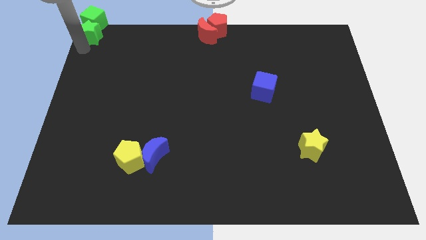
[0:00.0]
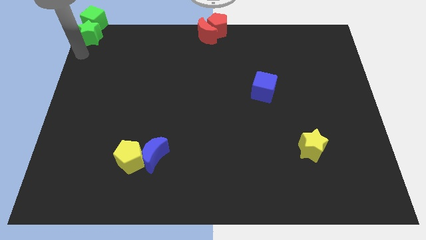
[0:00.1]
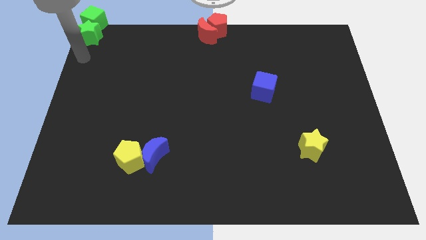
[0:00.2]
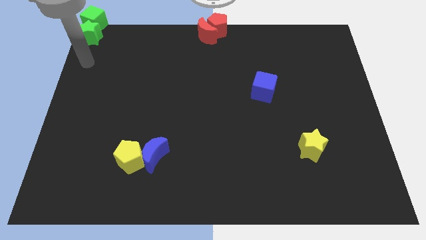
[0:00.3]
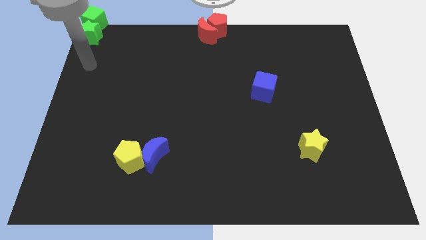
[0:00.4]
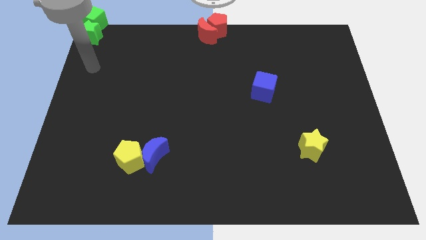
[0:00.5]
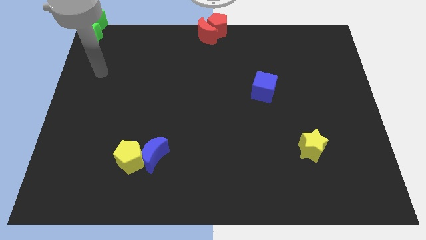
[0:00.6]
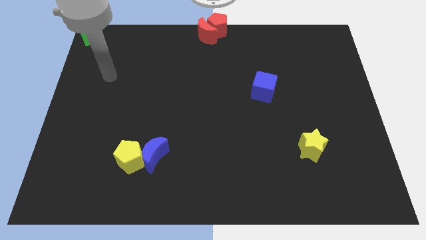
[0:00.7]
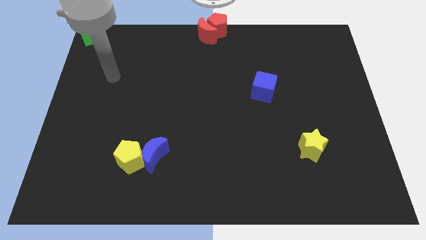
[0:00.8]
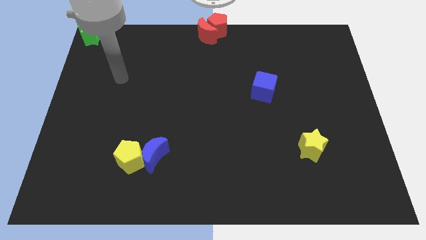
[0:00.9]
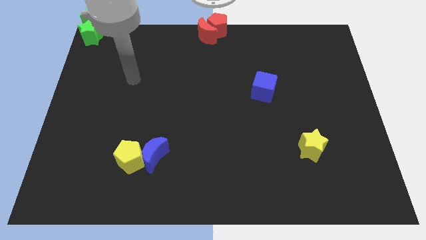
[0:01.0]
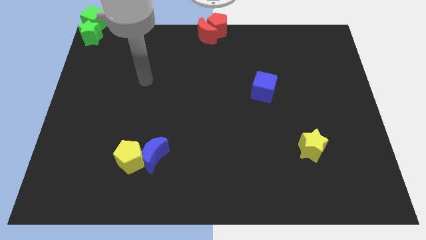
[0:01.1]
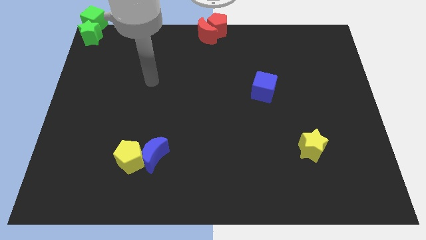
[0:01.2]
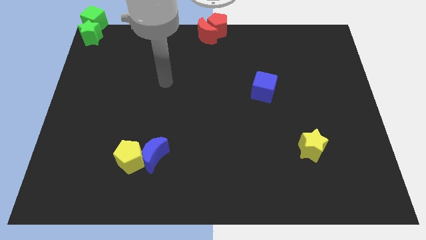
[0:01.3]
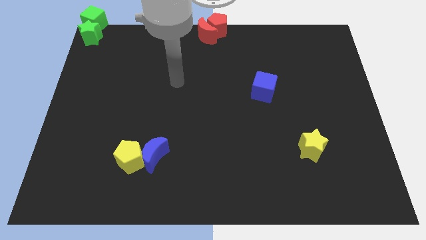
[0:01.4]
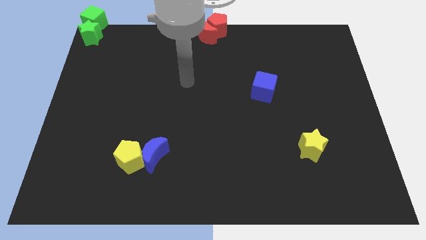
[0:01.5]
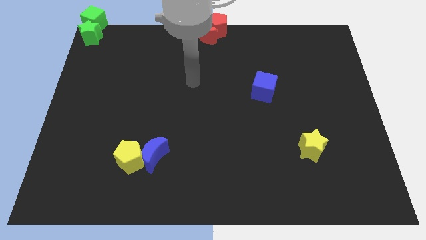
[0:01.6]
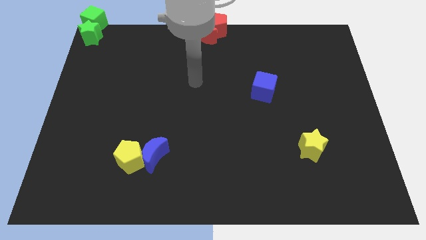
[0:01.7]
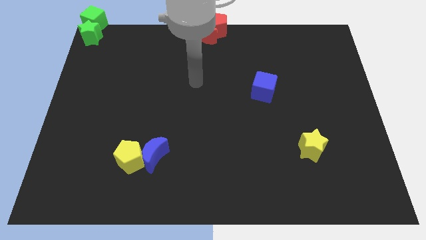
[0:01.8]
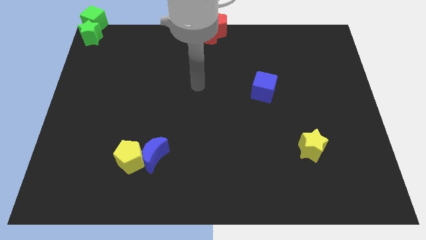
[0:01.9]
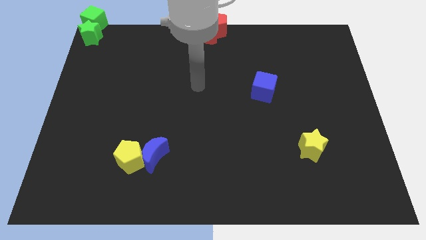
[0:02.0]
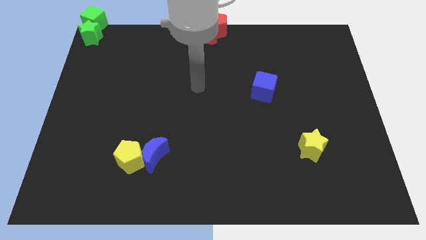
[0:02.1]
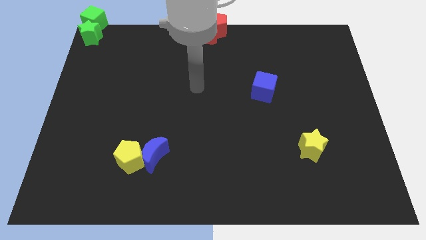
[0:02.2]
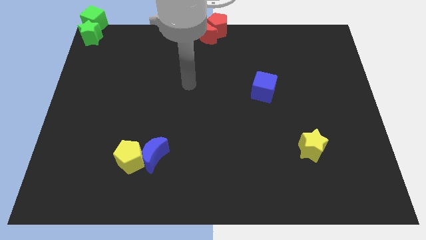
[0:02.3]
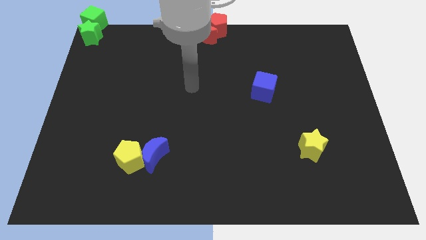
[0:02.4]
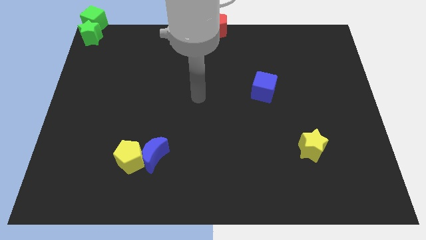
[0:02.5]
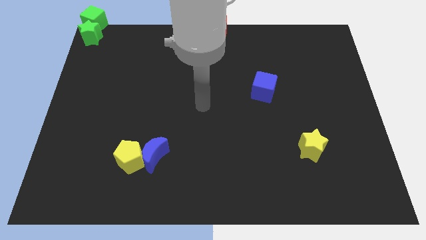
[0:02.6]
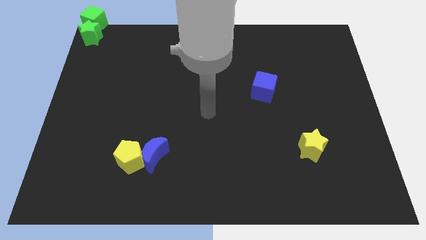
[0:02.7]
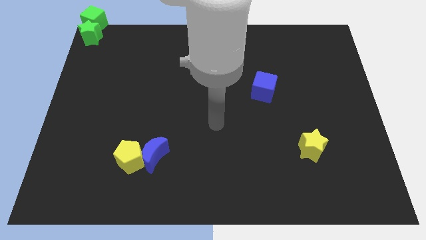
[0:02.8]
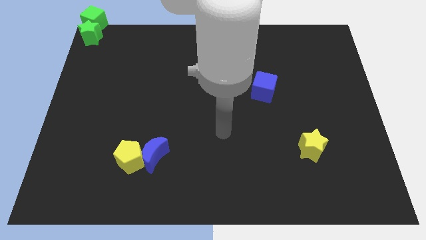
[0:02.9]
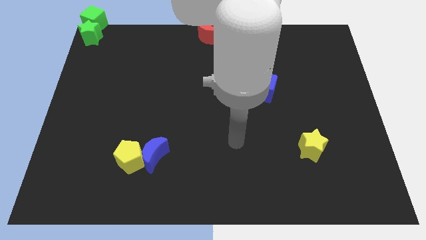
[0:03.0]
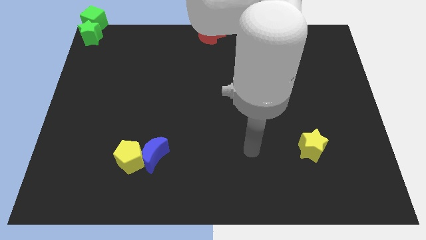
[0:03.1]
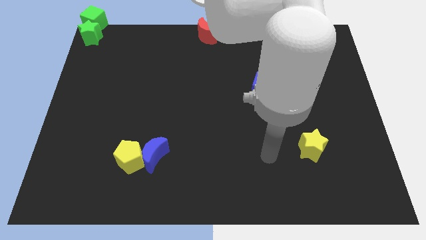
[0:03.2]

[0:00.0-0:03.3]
move the arm towards the left of the yellow star

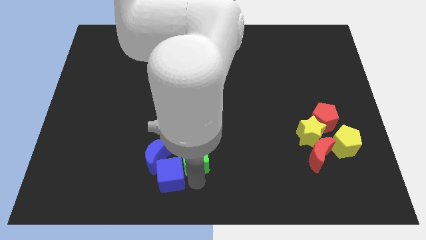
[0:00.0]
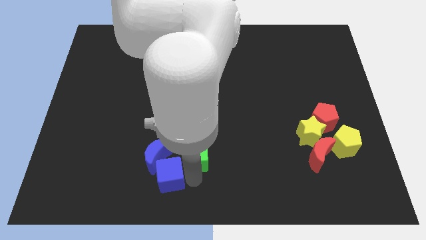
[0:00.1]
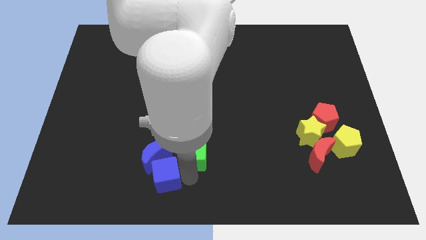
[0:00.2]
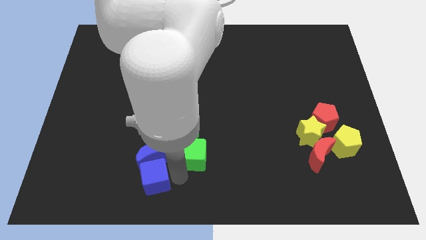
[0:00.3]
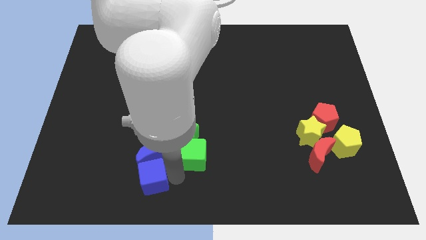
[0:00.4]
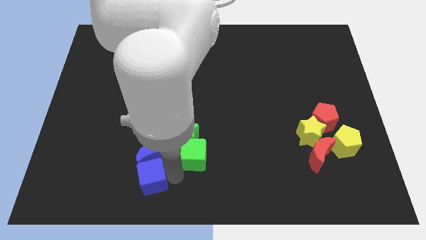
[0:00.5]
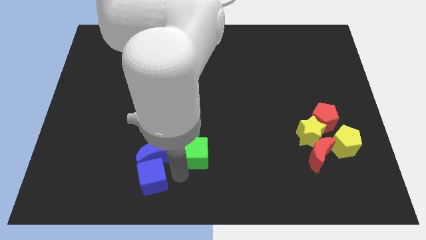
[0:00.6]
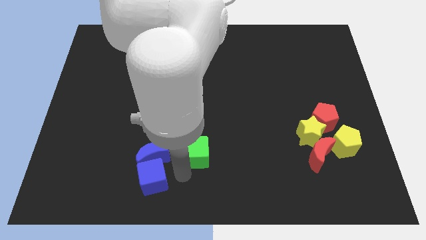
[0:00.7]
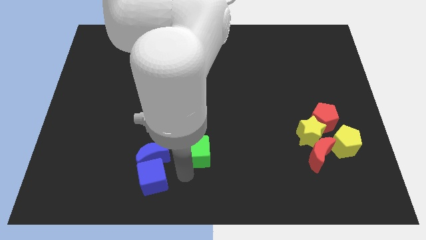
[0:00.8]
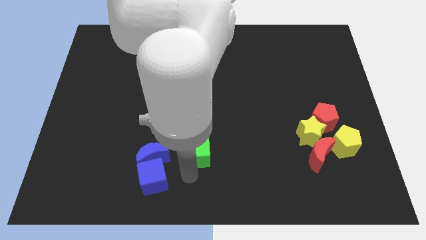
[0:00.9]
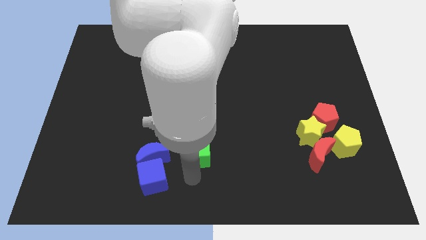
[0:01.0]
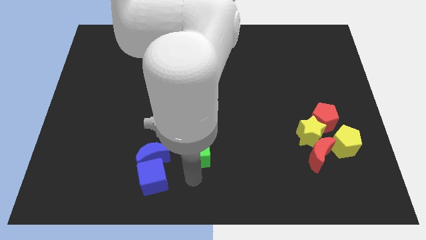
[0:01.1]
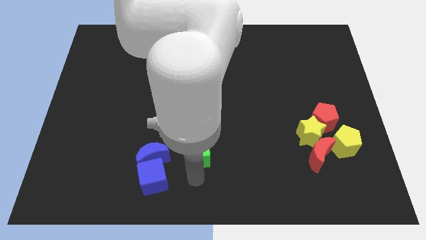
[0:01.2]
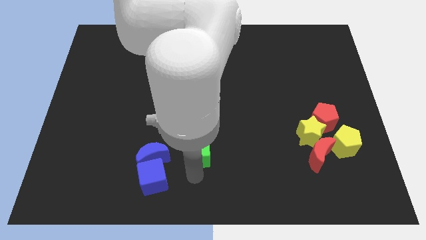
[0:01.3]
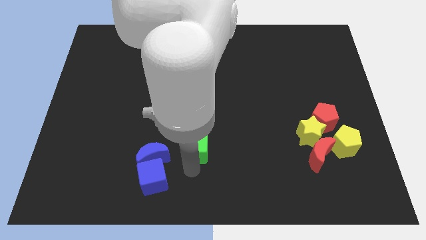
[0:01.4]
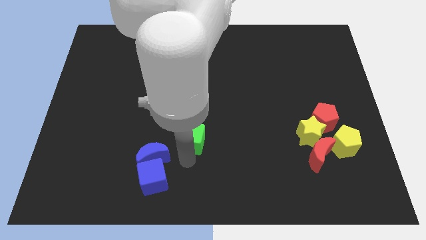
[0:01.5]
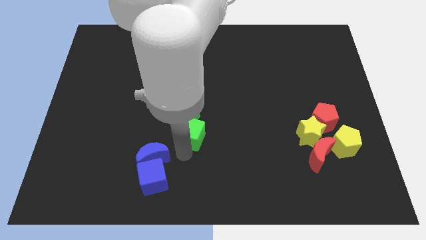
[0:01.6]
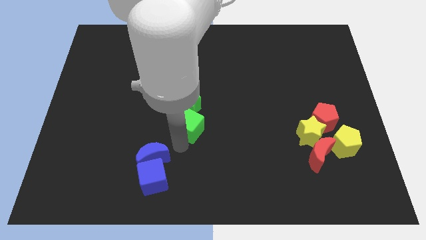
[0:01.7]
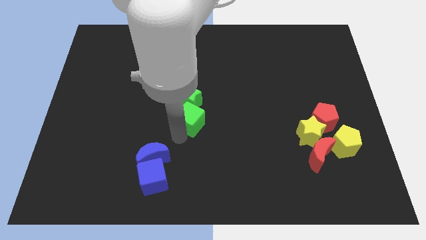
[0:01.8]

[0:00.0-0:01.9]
place the green blocks diagonally top right to the blue blocks

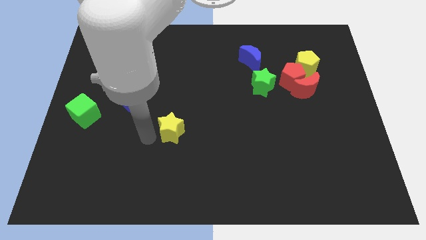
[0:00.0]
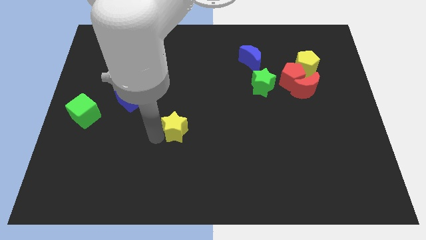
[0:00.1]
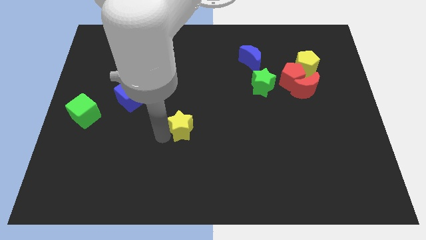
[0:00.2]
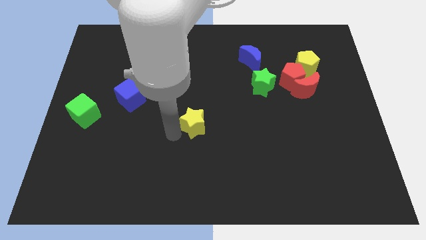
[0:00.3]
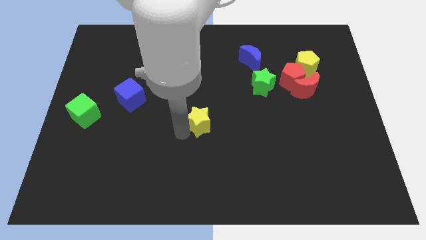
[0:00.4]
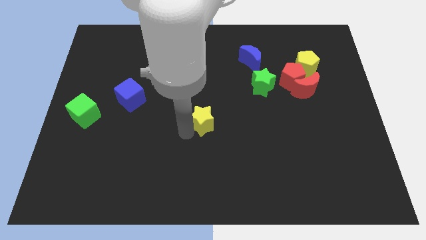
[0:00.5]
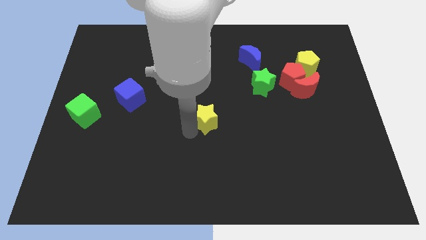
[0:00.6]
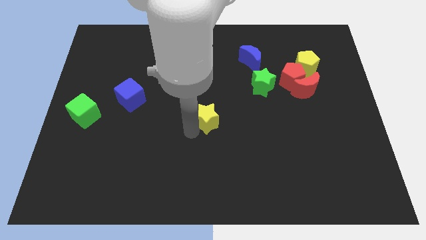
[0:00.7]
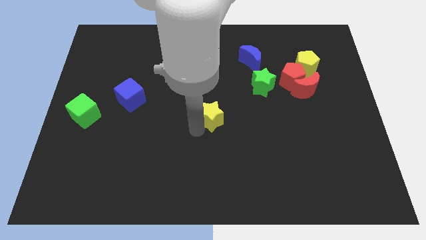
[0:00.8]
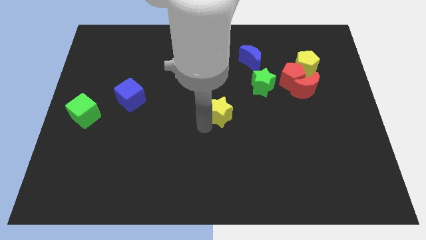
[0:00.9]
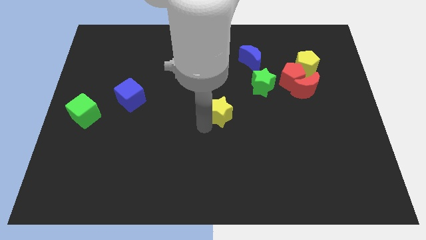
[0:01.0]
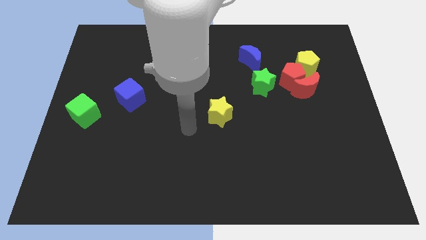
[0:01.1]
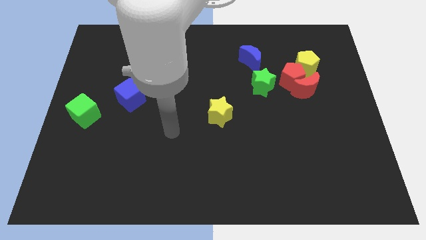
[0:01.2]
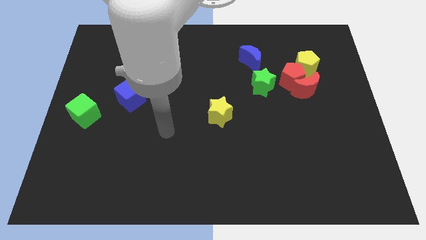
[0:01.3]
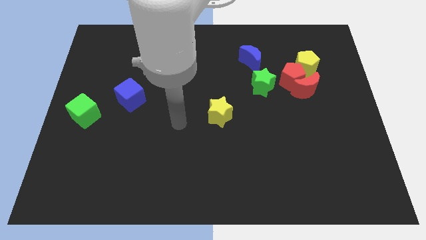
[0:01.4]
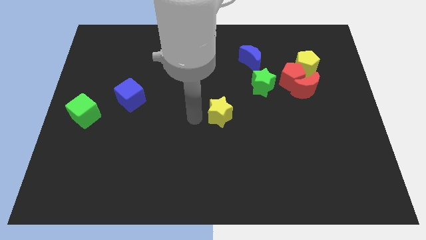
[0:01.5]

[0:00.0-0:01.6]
put the yellow star at the center of the board

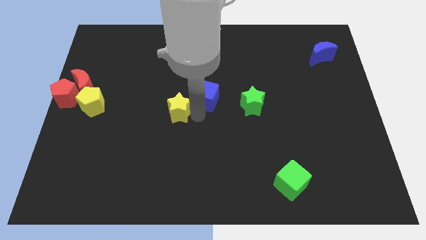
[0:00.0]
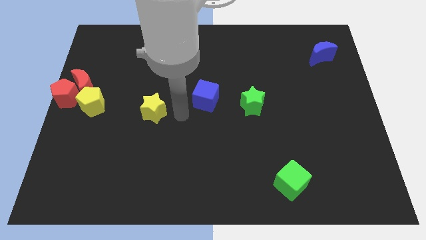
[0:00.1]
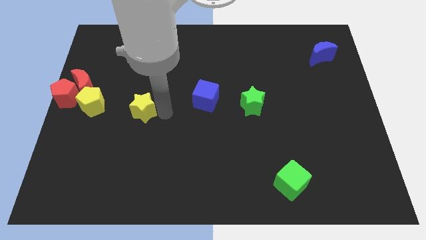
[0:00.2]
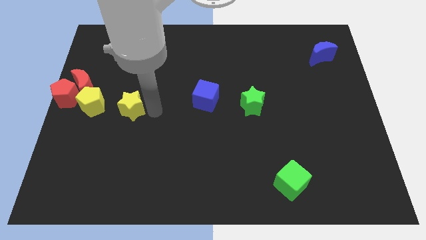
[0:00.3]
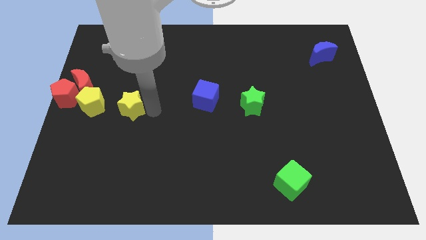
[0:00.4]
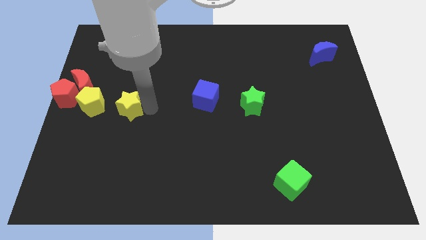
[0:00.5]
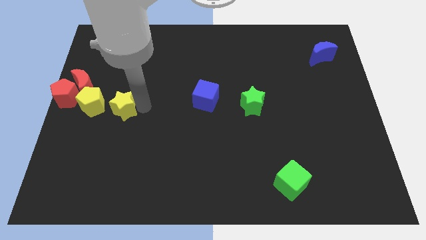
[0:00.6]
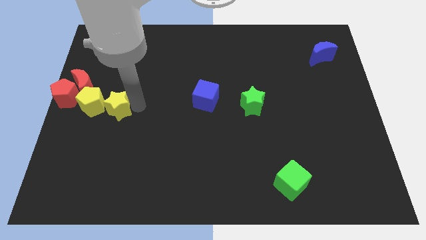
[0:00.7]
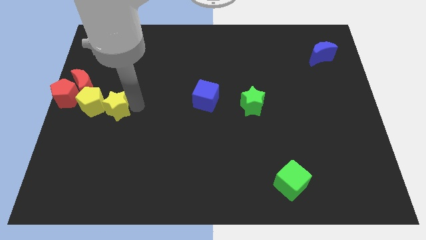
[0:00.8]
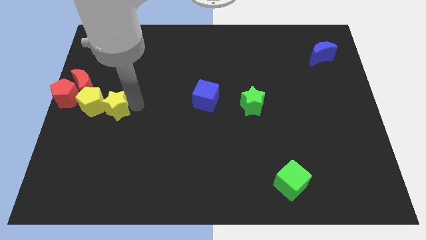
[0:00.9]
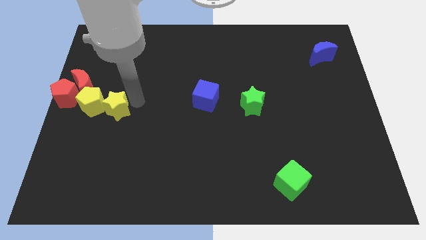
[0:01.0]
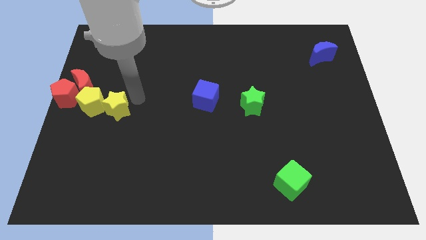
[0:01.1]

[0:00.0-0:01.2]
push the yellow star close to the yellow pentagon

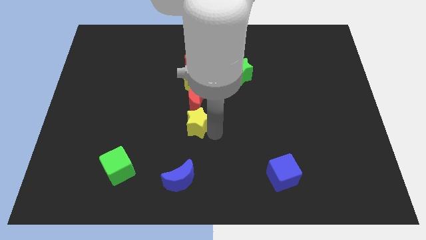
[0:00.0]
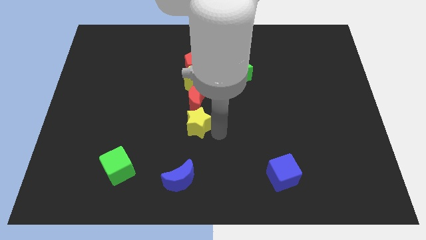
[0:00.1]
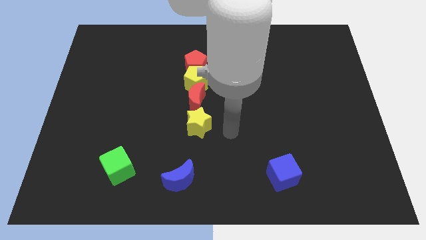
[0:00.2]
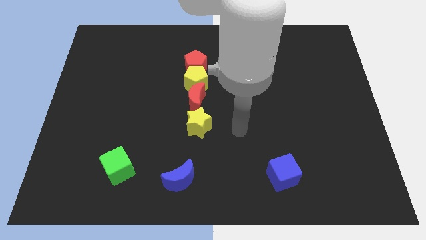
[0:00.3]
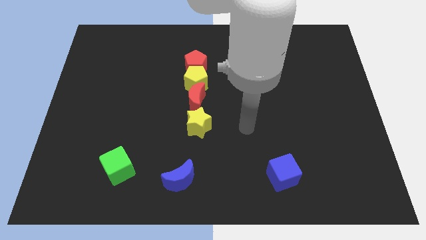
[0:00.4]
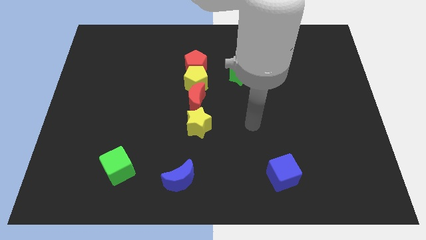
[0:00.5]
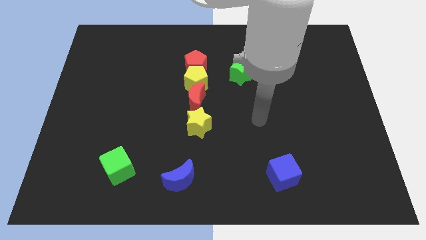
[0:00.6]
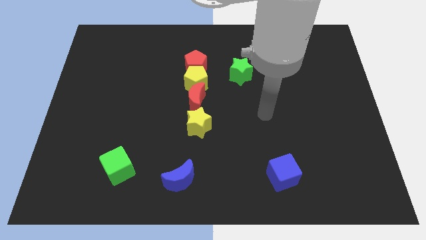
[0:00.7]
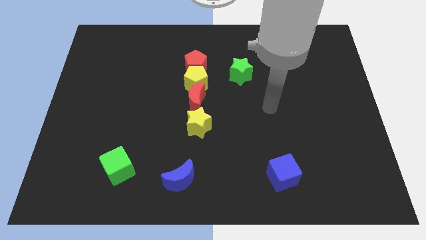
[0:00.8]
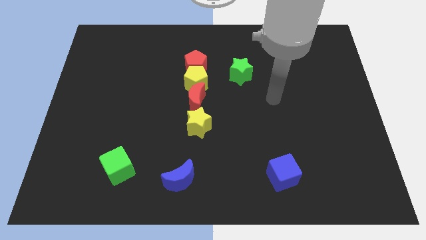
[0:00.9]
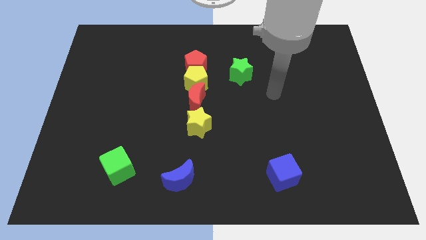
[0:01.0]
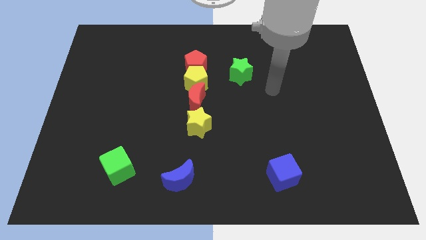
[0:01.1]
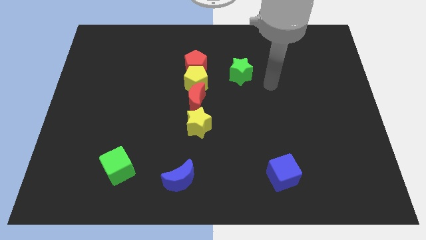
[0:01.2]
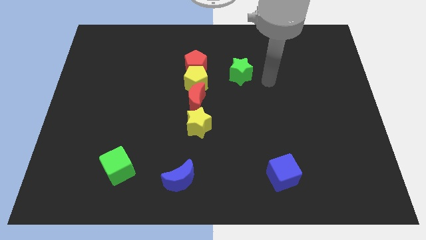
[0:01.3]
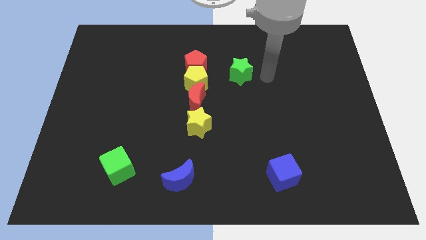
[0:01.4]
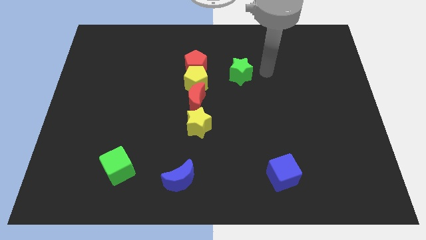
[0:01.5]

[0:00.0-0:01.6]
push the arm to the right side of the green star
